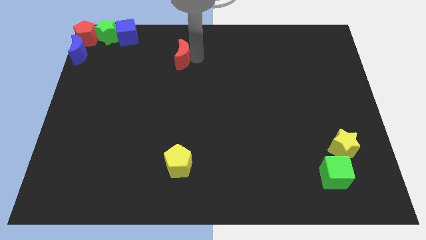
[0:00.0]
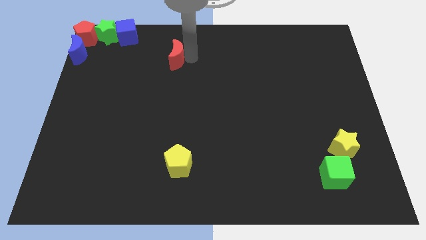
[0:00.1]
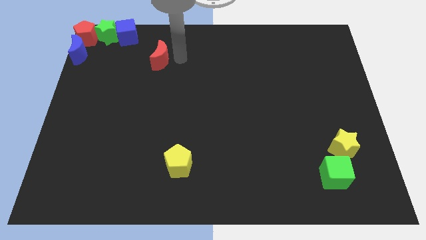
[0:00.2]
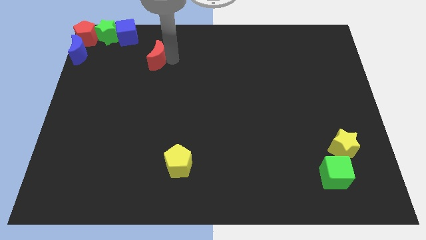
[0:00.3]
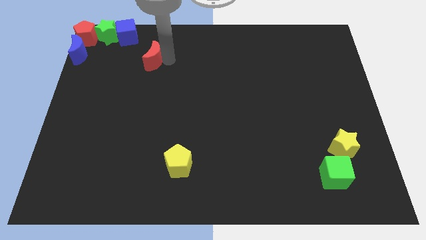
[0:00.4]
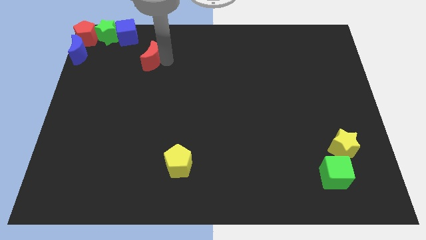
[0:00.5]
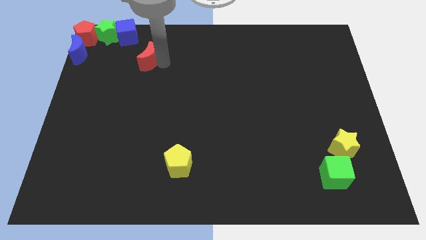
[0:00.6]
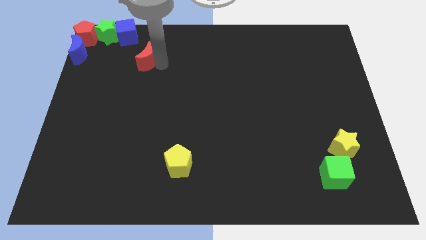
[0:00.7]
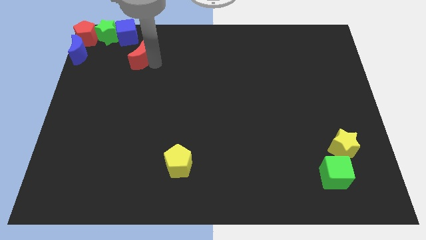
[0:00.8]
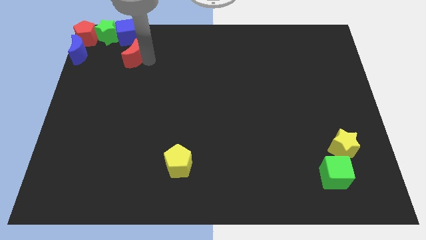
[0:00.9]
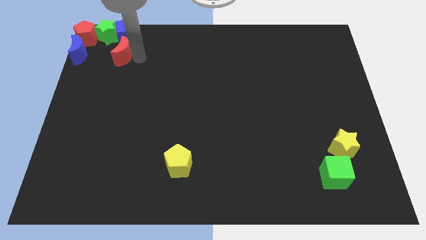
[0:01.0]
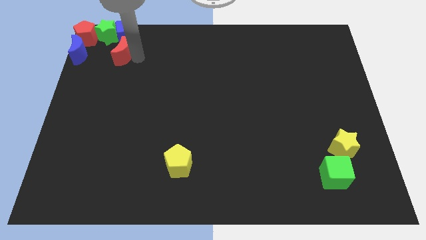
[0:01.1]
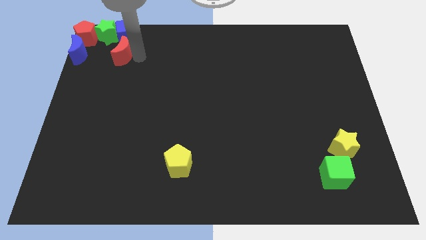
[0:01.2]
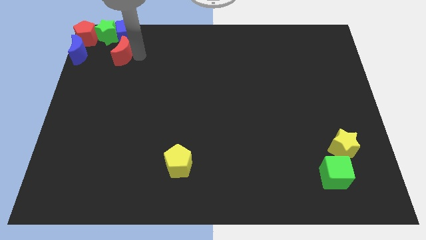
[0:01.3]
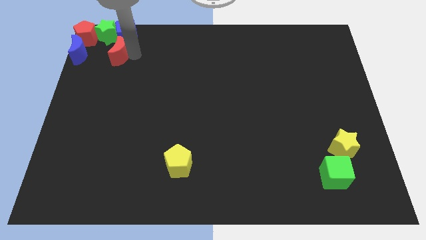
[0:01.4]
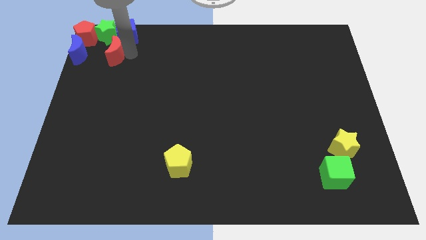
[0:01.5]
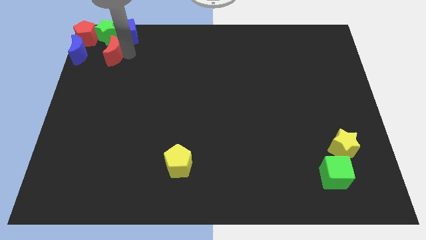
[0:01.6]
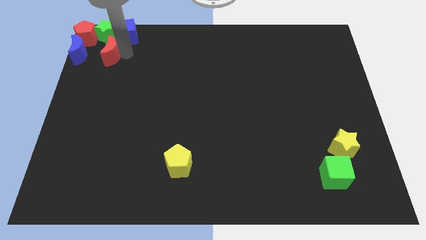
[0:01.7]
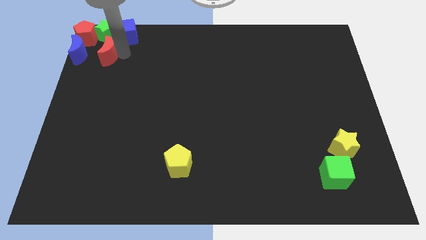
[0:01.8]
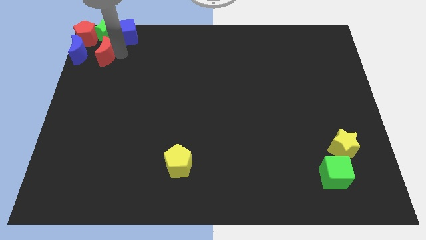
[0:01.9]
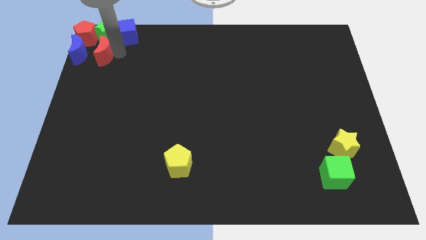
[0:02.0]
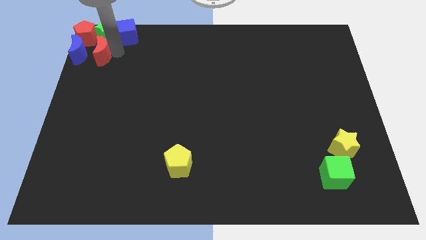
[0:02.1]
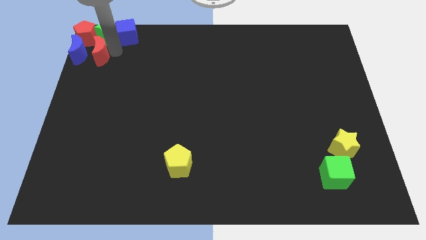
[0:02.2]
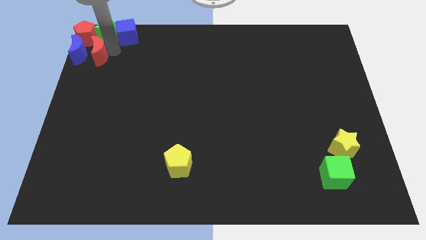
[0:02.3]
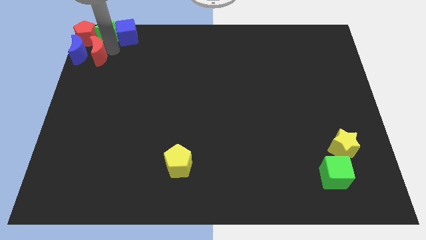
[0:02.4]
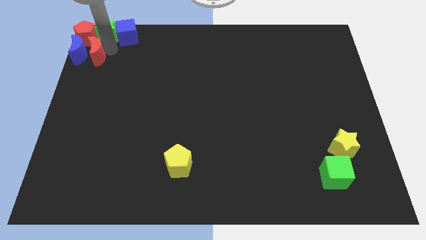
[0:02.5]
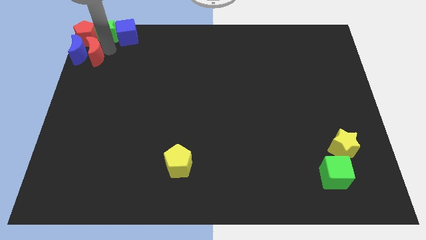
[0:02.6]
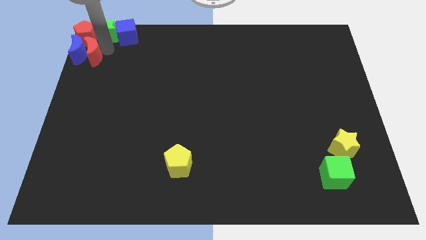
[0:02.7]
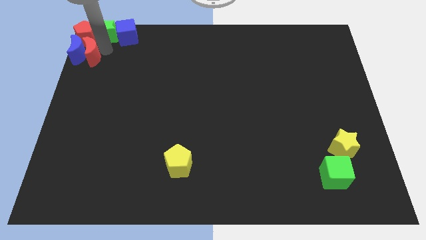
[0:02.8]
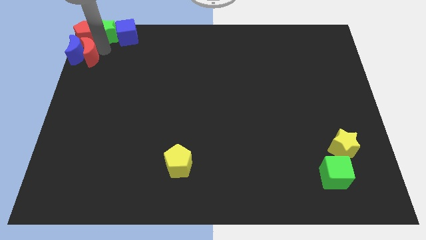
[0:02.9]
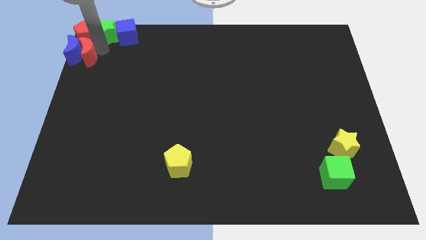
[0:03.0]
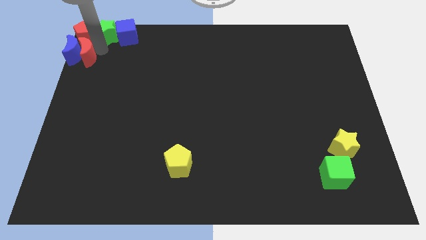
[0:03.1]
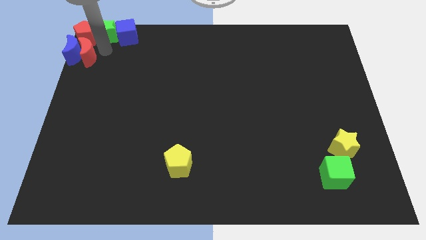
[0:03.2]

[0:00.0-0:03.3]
drag the red crescent into the right side of the blue crescent

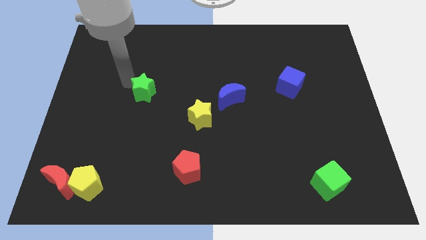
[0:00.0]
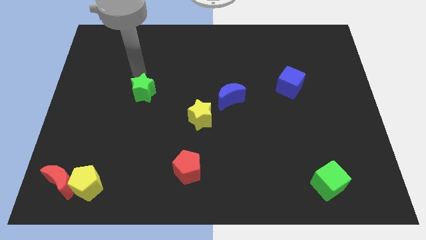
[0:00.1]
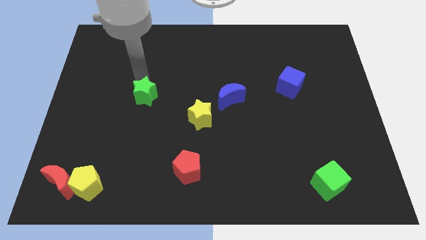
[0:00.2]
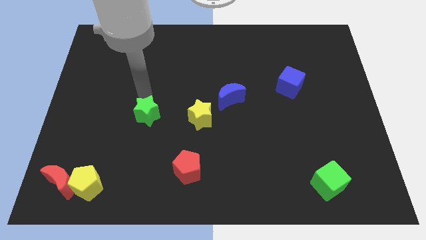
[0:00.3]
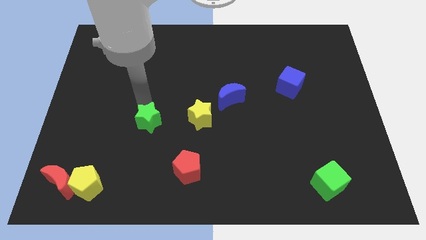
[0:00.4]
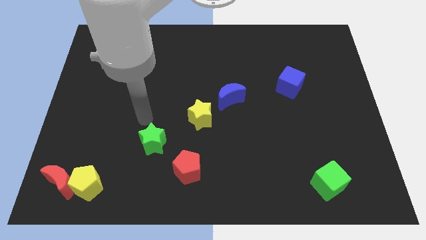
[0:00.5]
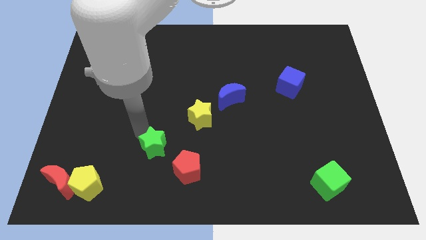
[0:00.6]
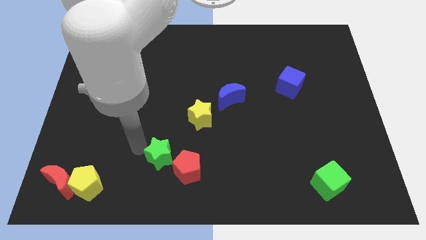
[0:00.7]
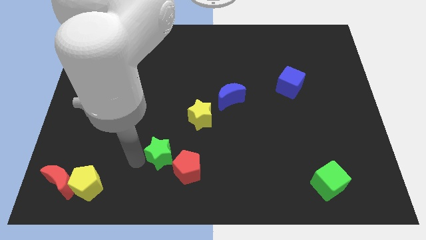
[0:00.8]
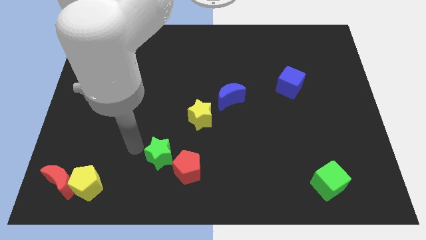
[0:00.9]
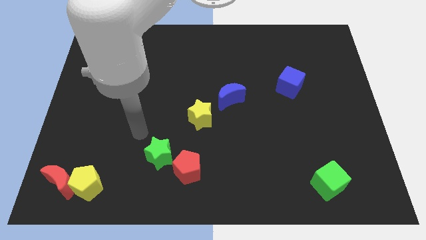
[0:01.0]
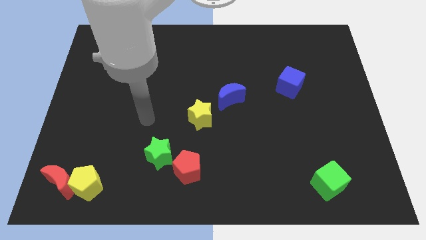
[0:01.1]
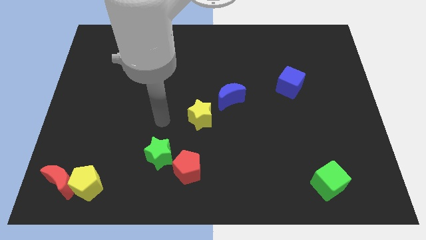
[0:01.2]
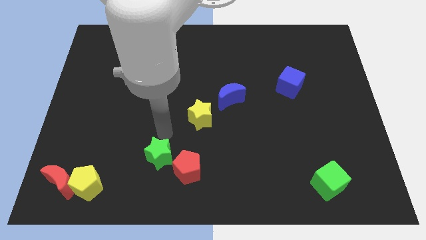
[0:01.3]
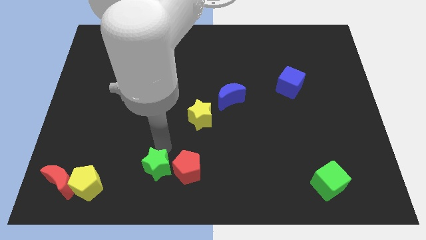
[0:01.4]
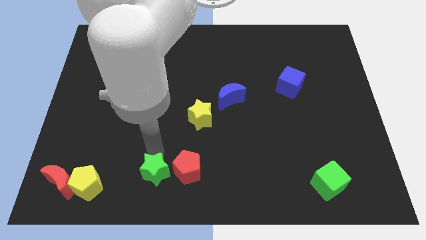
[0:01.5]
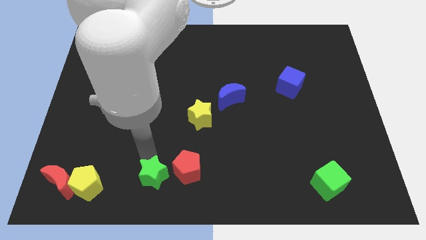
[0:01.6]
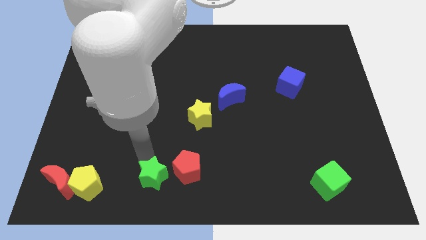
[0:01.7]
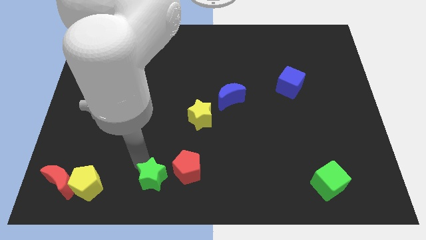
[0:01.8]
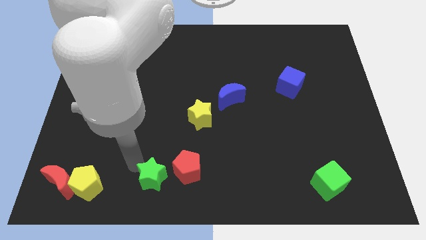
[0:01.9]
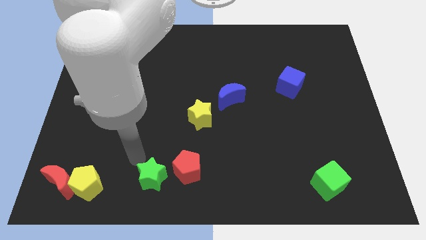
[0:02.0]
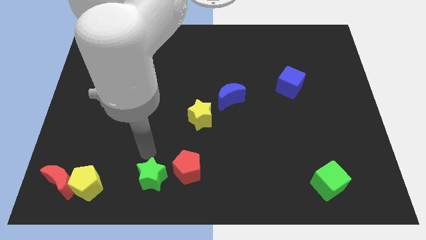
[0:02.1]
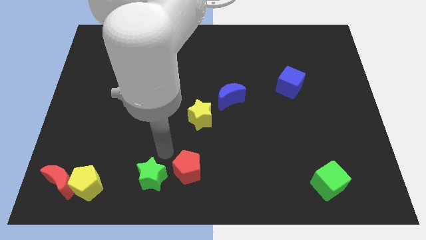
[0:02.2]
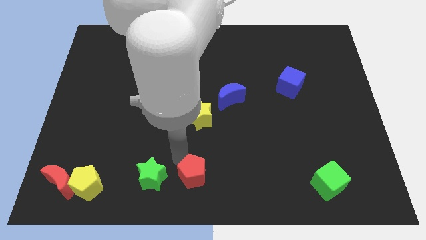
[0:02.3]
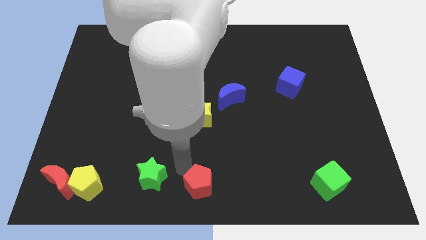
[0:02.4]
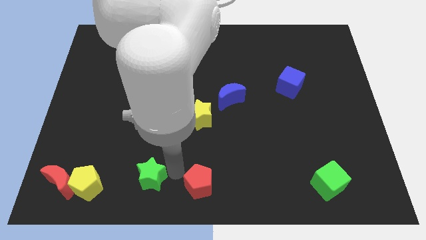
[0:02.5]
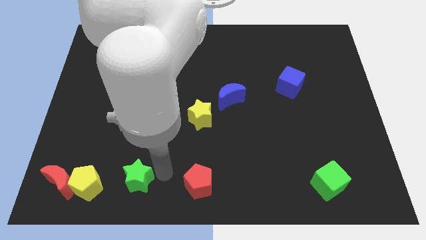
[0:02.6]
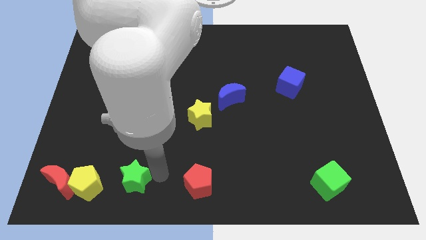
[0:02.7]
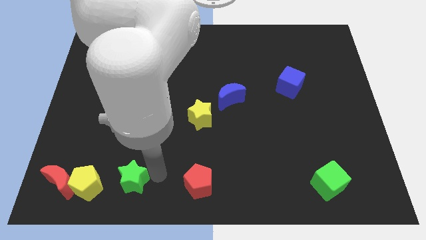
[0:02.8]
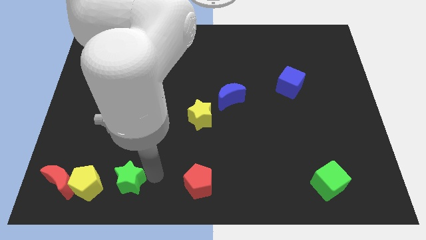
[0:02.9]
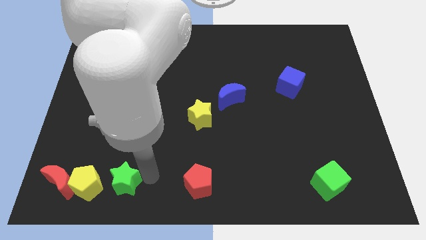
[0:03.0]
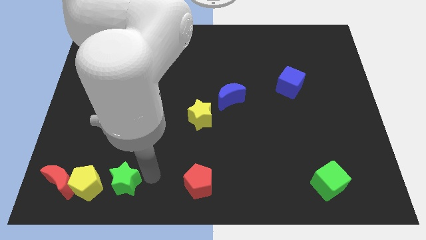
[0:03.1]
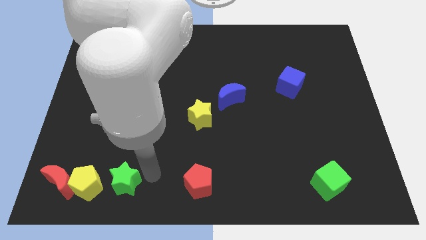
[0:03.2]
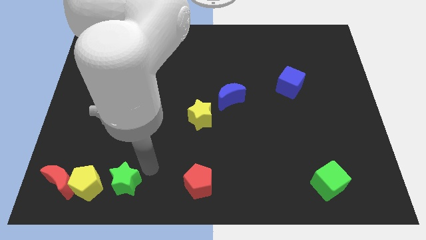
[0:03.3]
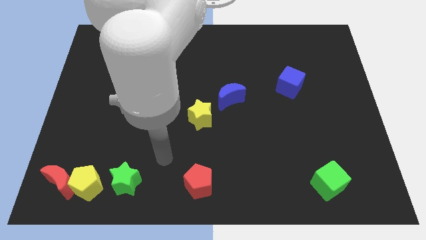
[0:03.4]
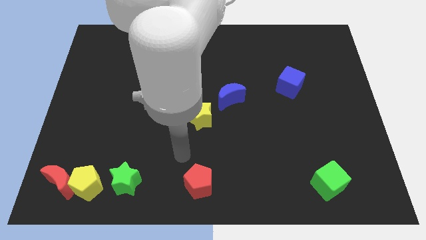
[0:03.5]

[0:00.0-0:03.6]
place green star to the right of the yellow pentagon

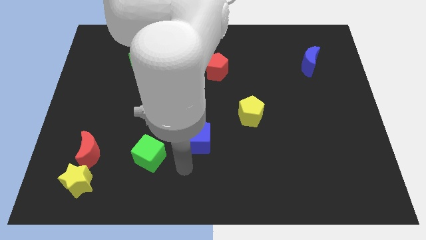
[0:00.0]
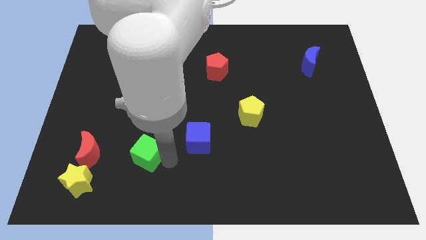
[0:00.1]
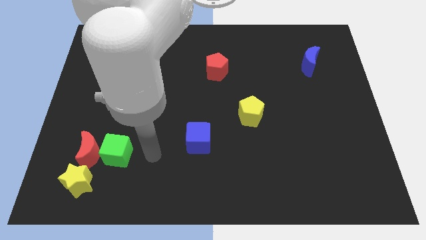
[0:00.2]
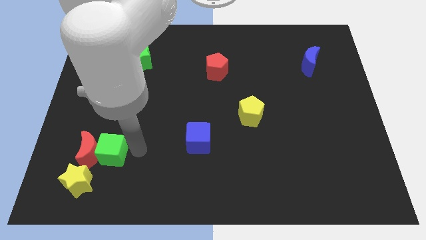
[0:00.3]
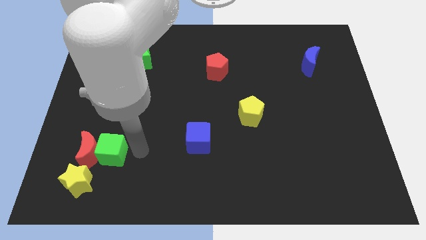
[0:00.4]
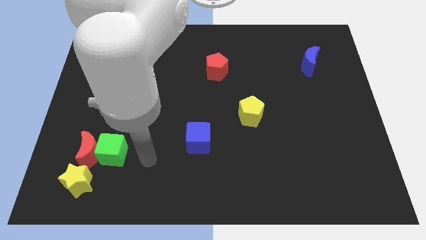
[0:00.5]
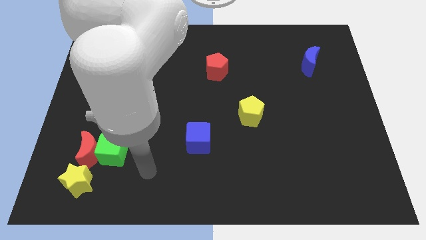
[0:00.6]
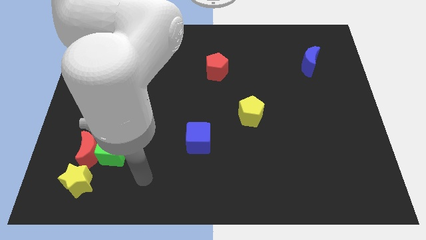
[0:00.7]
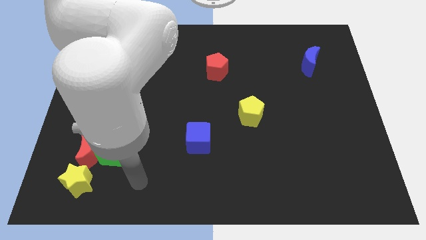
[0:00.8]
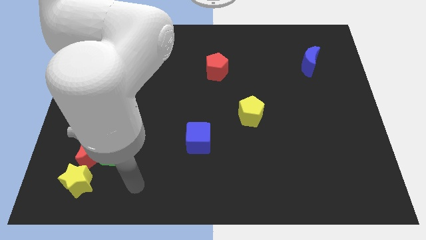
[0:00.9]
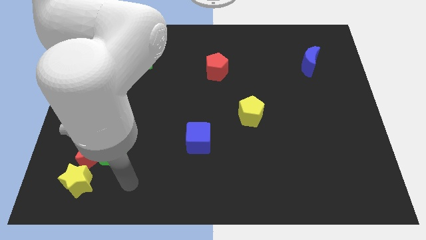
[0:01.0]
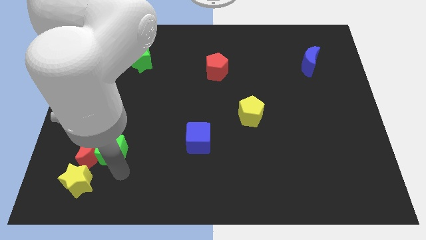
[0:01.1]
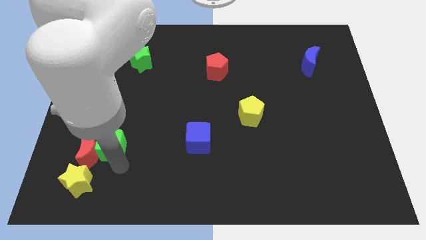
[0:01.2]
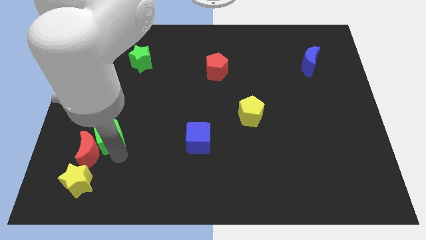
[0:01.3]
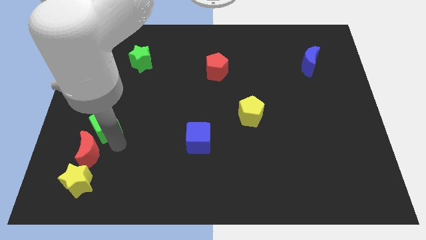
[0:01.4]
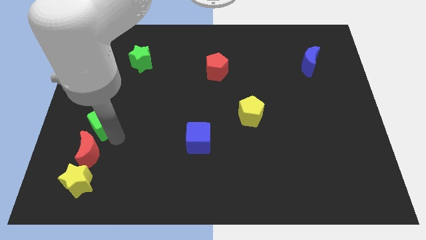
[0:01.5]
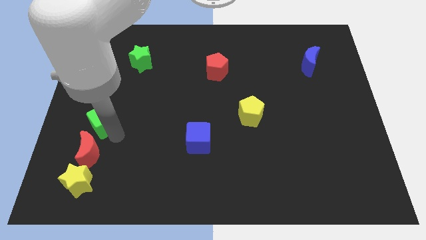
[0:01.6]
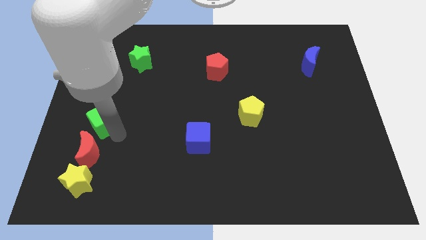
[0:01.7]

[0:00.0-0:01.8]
place the green cube to the diagonally to green star

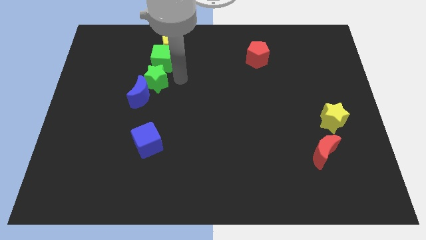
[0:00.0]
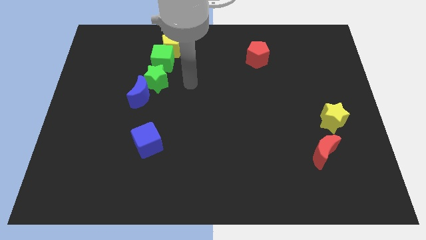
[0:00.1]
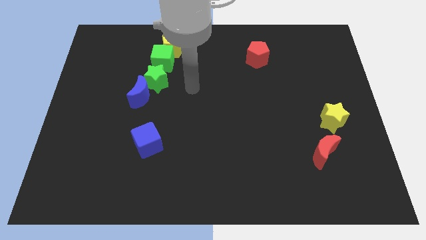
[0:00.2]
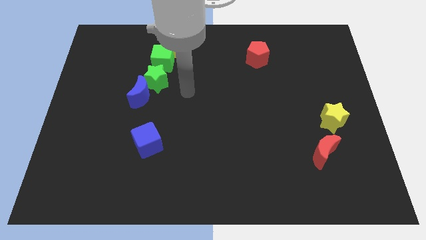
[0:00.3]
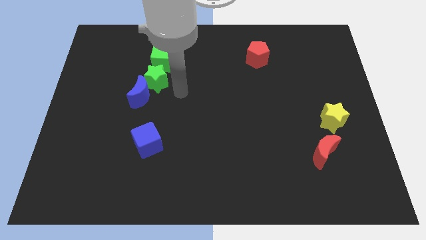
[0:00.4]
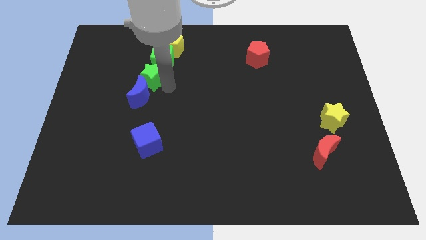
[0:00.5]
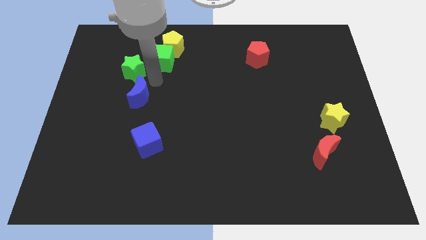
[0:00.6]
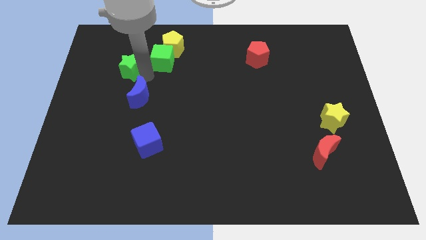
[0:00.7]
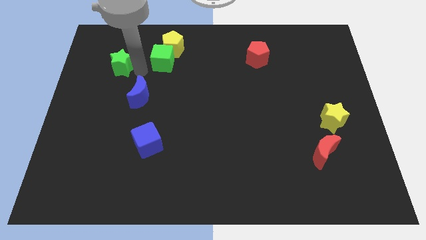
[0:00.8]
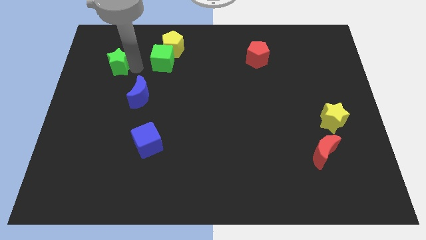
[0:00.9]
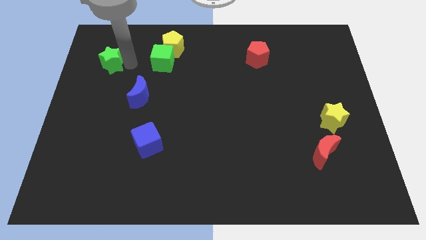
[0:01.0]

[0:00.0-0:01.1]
separate green star from blue moon
